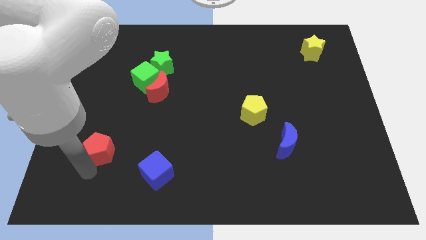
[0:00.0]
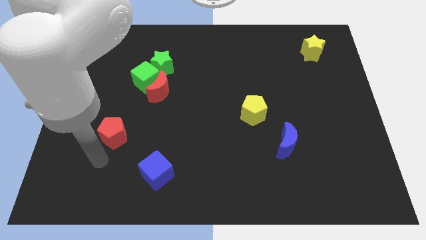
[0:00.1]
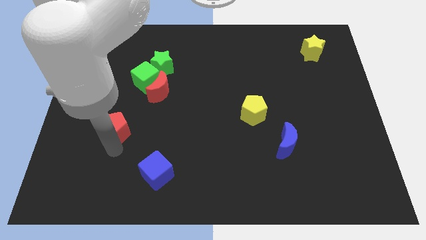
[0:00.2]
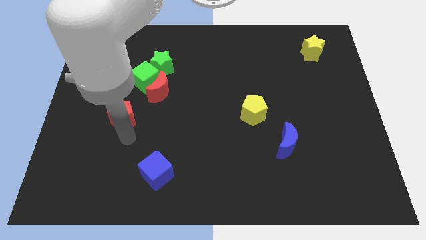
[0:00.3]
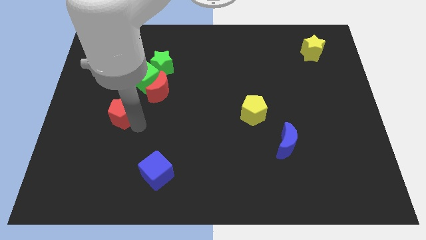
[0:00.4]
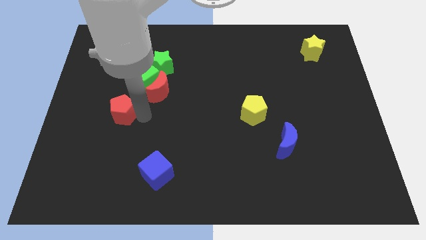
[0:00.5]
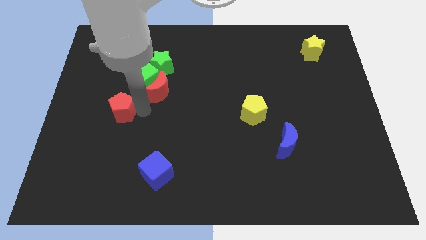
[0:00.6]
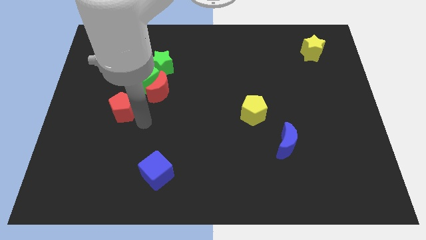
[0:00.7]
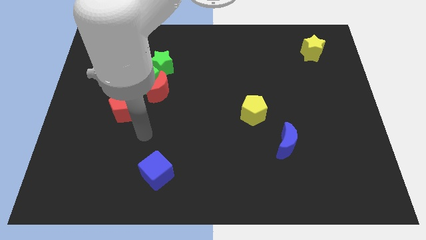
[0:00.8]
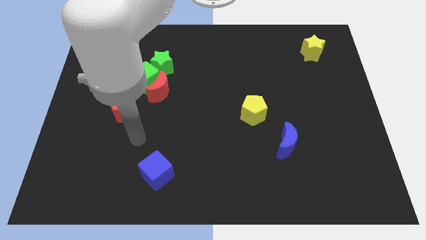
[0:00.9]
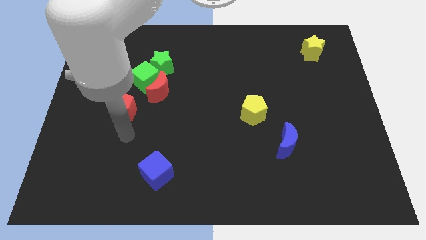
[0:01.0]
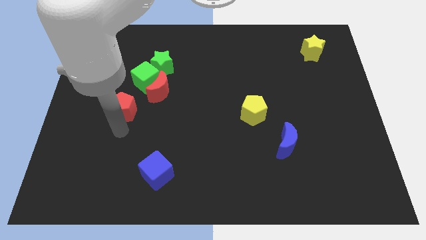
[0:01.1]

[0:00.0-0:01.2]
push red pentagon slightly upwards

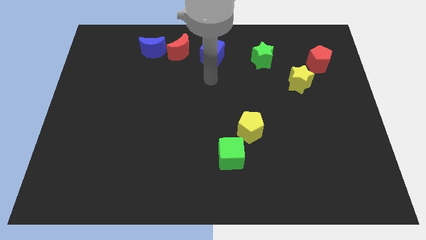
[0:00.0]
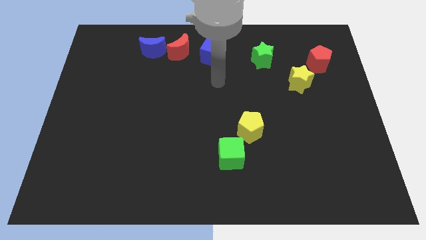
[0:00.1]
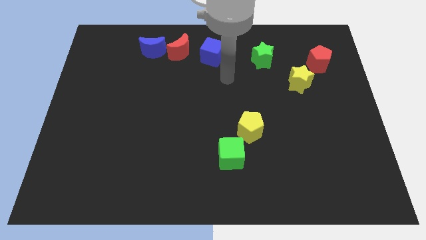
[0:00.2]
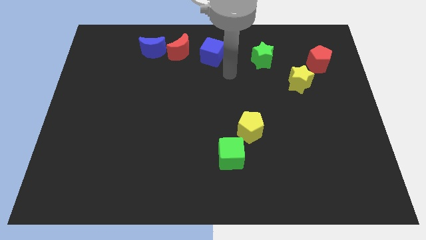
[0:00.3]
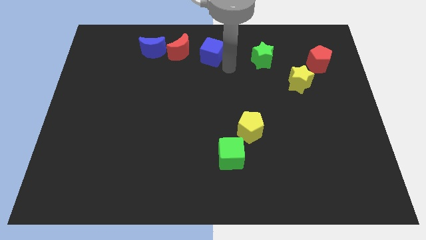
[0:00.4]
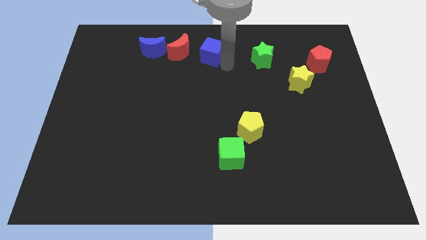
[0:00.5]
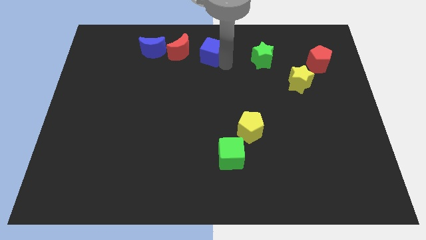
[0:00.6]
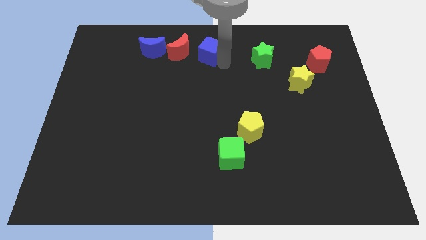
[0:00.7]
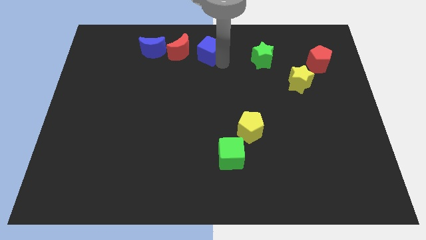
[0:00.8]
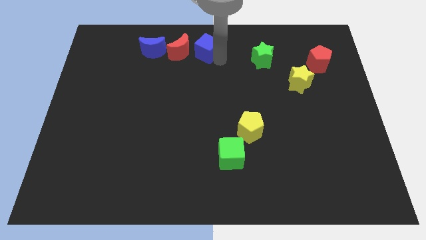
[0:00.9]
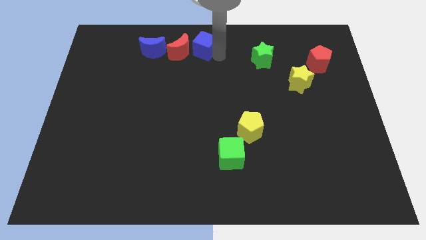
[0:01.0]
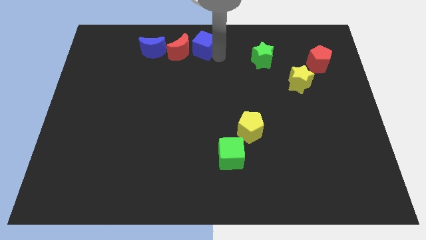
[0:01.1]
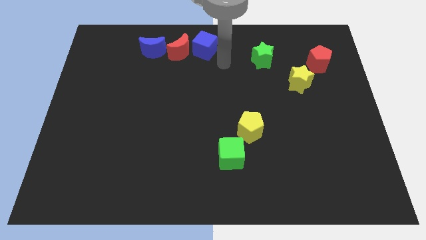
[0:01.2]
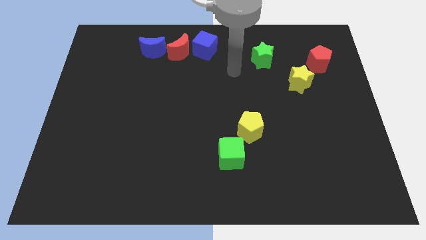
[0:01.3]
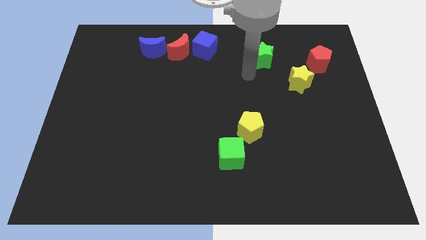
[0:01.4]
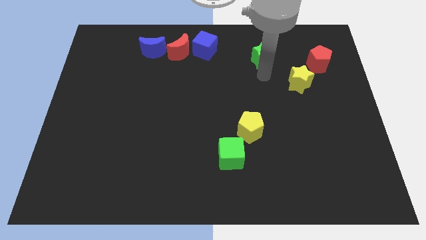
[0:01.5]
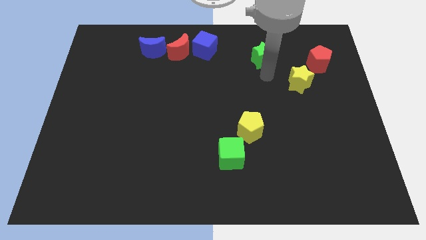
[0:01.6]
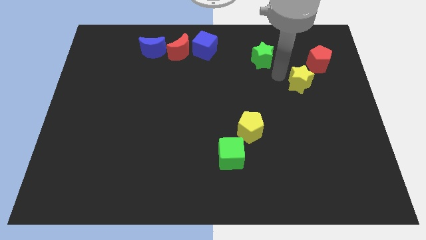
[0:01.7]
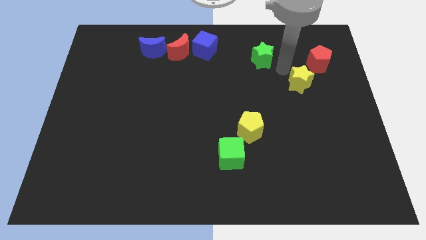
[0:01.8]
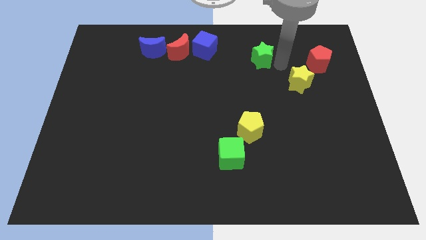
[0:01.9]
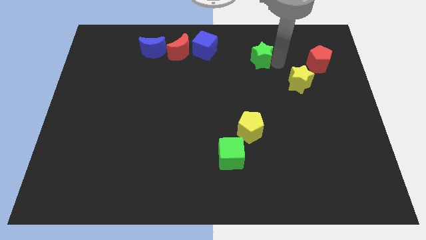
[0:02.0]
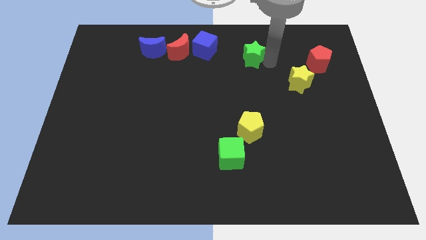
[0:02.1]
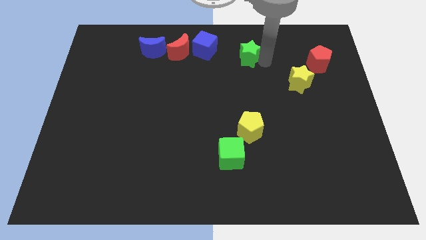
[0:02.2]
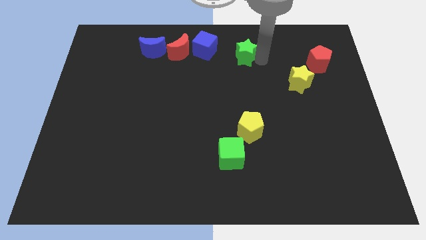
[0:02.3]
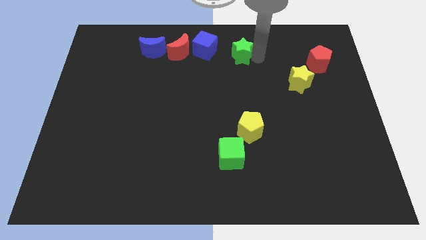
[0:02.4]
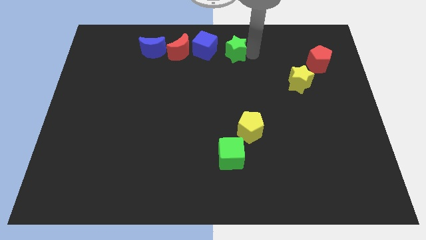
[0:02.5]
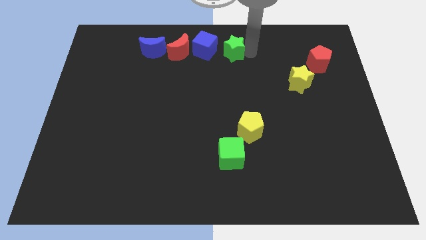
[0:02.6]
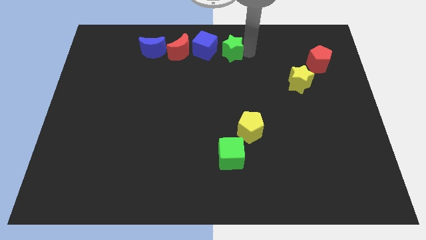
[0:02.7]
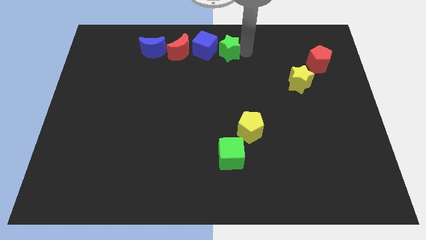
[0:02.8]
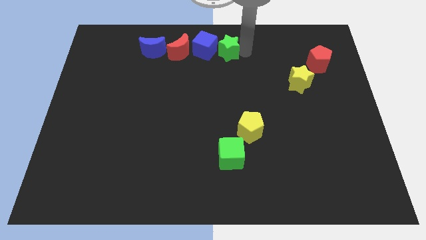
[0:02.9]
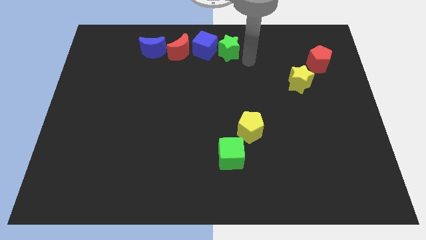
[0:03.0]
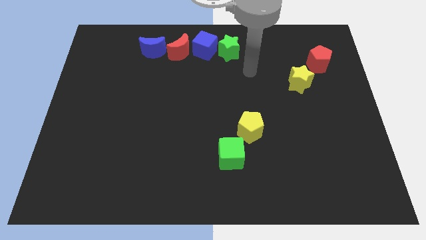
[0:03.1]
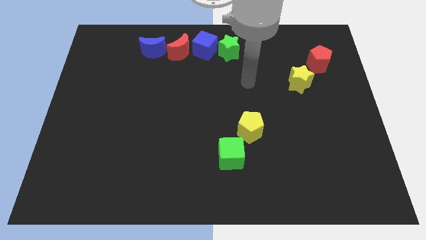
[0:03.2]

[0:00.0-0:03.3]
move green star to the right side of the blue cube

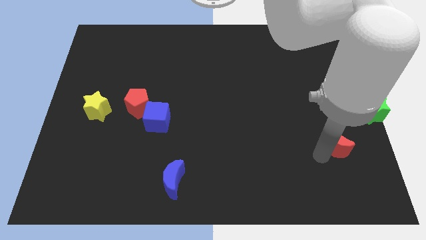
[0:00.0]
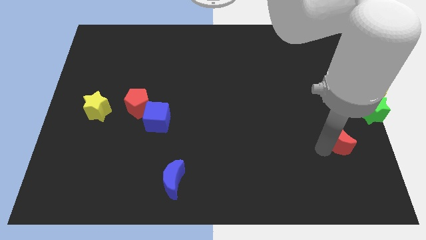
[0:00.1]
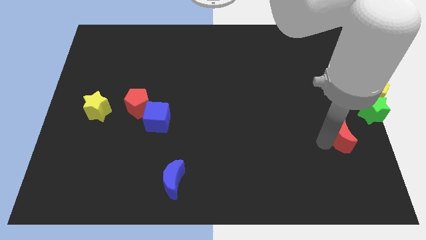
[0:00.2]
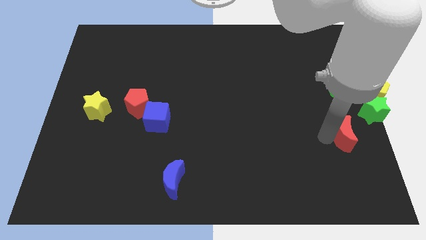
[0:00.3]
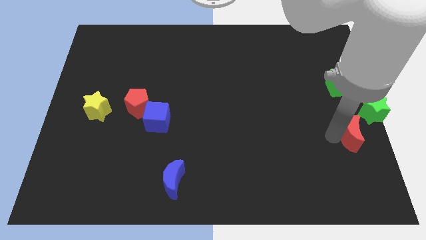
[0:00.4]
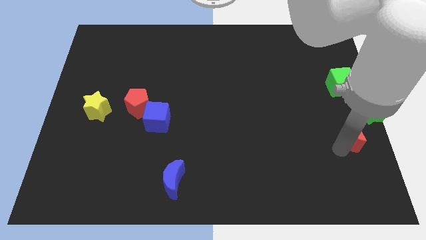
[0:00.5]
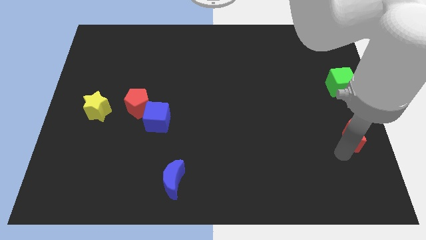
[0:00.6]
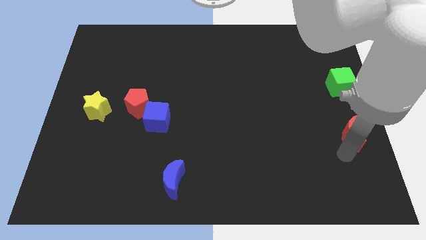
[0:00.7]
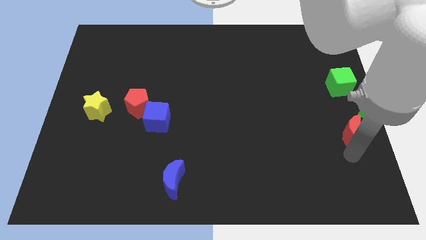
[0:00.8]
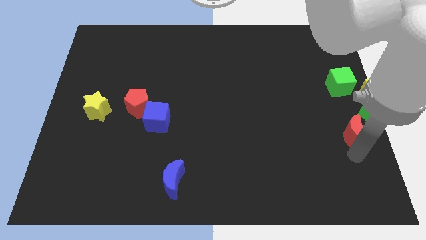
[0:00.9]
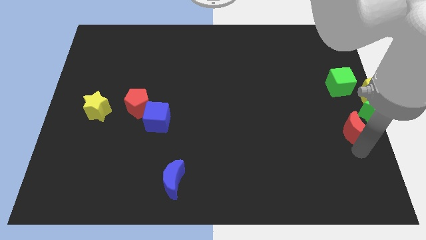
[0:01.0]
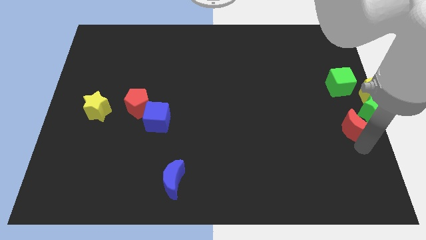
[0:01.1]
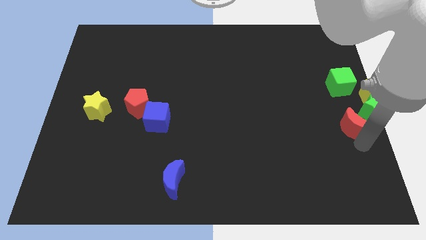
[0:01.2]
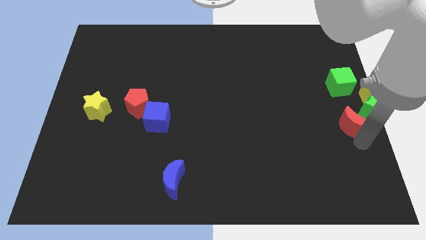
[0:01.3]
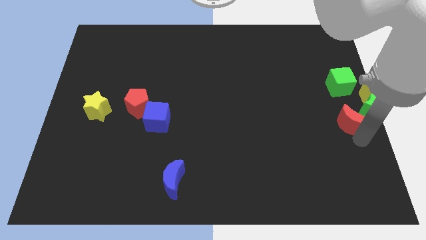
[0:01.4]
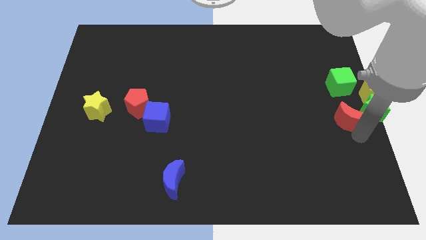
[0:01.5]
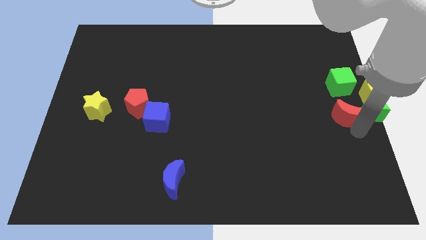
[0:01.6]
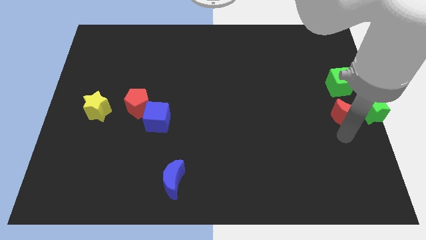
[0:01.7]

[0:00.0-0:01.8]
put the red moon below the green cube

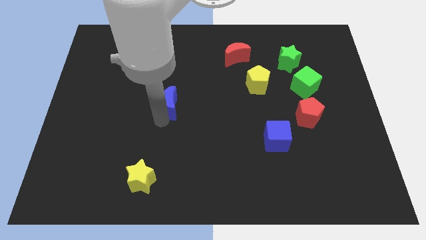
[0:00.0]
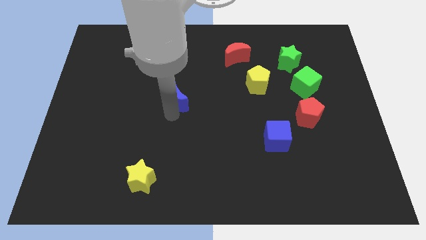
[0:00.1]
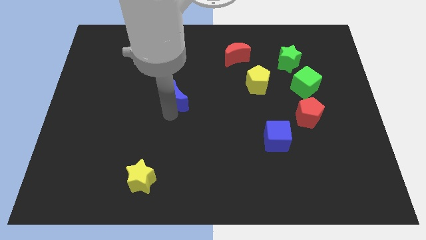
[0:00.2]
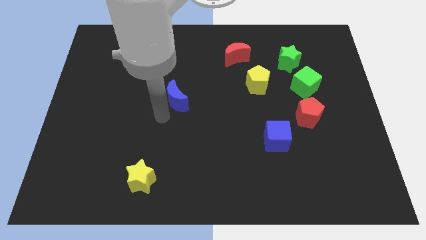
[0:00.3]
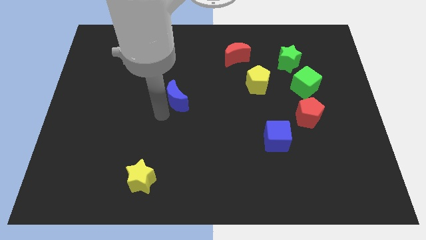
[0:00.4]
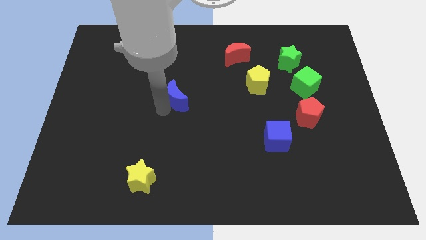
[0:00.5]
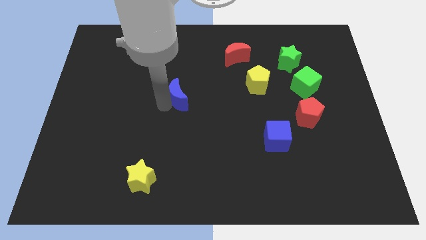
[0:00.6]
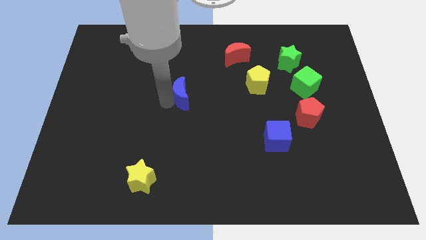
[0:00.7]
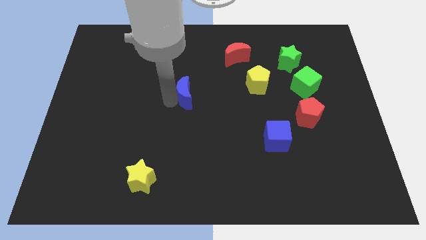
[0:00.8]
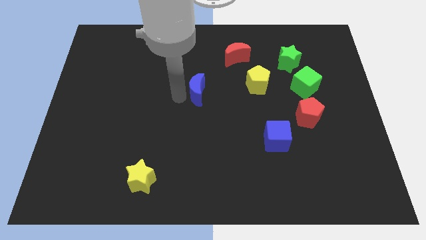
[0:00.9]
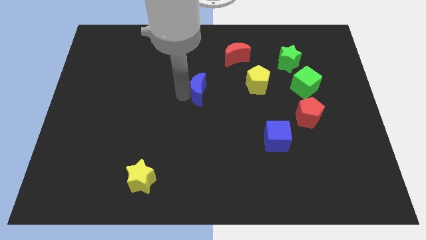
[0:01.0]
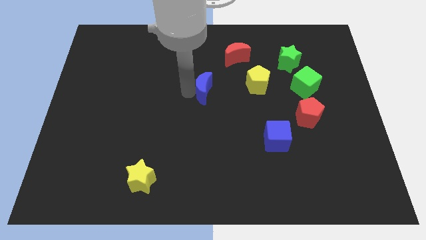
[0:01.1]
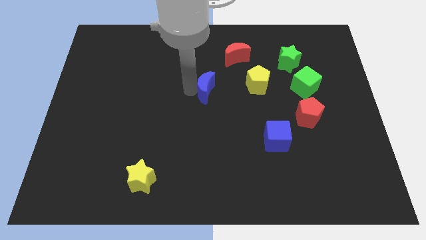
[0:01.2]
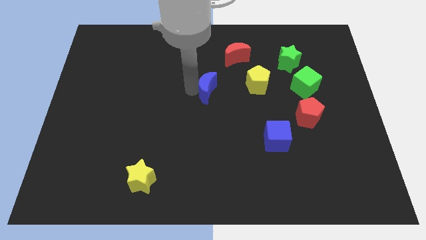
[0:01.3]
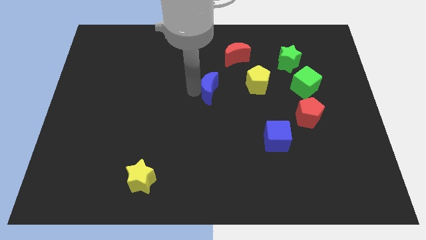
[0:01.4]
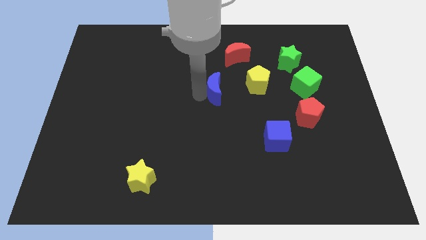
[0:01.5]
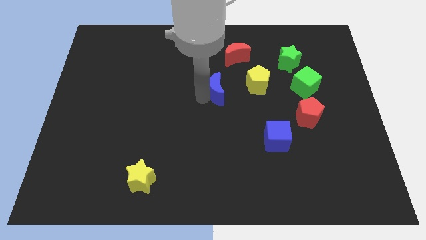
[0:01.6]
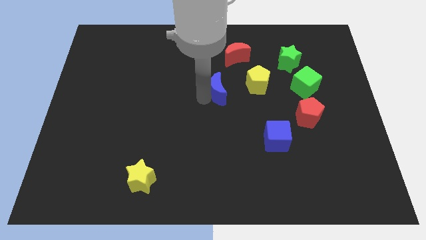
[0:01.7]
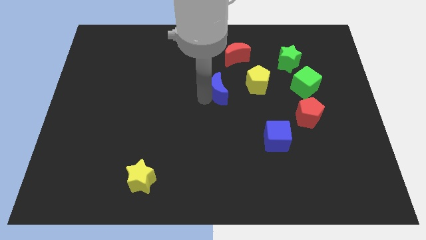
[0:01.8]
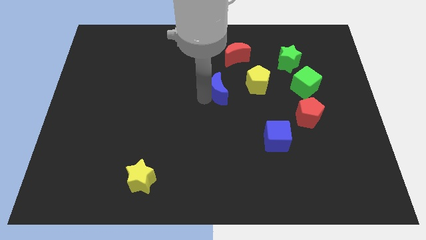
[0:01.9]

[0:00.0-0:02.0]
place the blue moon diagonal to the left to the yellow pentagon

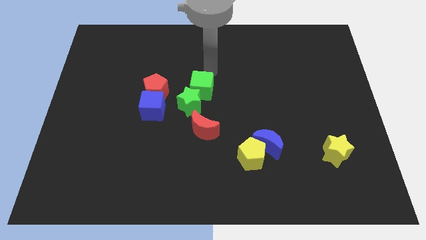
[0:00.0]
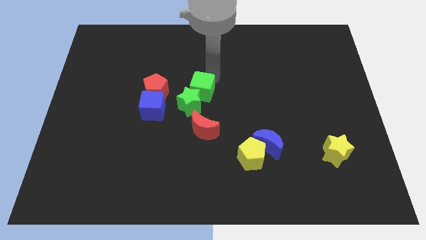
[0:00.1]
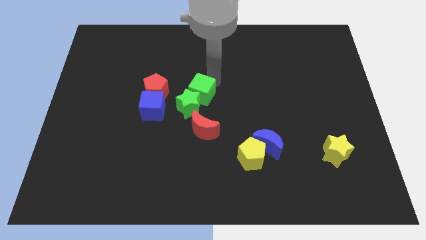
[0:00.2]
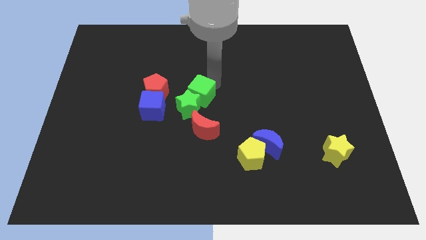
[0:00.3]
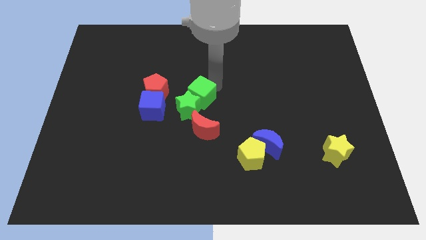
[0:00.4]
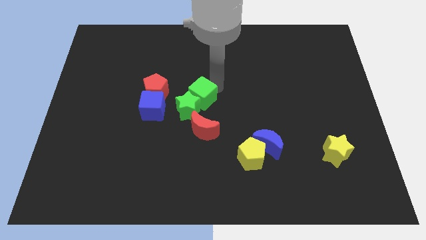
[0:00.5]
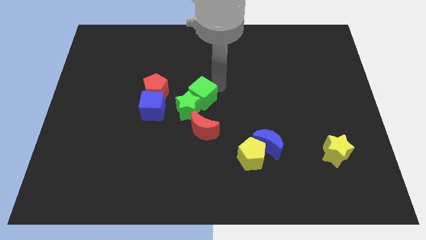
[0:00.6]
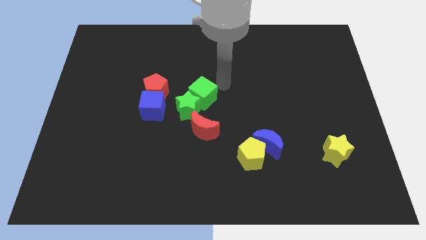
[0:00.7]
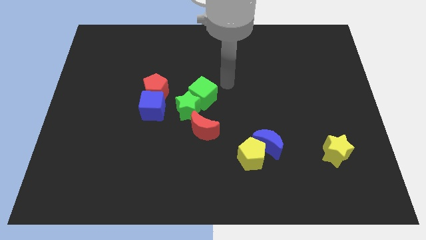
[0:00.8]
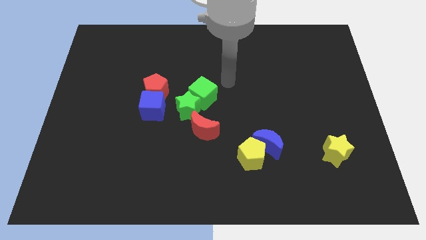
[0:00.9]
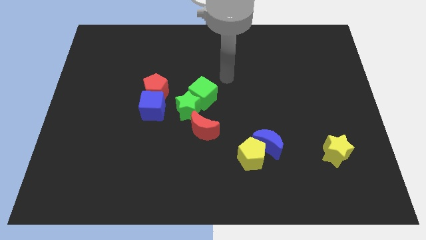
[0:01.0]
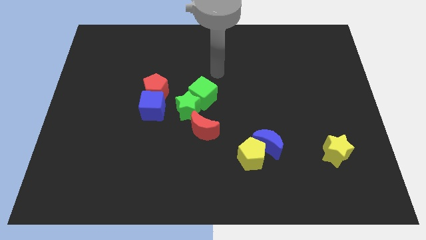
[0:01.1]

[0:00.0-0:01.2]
push the green cube into the green star
